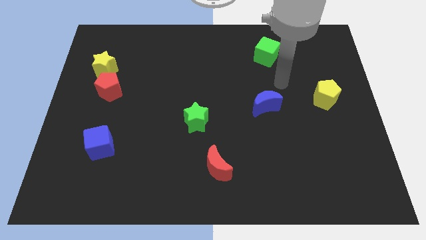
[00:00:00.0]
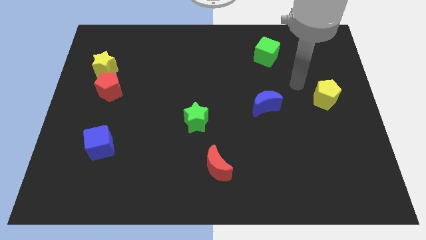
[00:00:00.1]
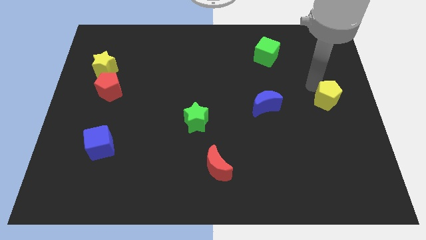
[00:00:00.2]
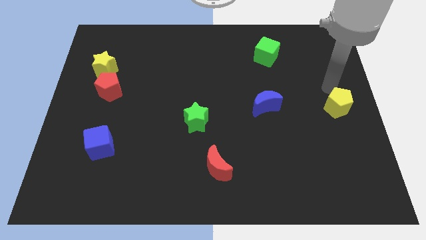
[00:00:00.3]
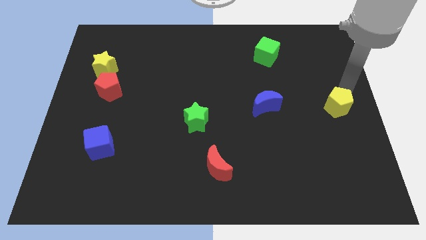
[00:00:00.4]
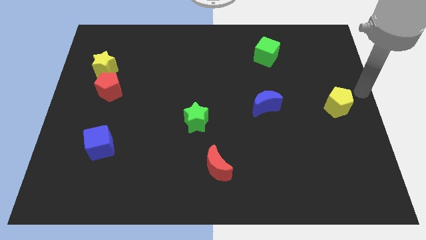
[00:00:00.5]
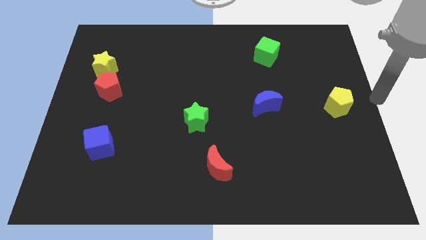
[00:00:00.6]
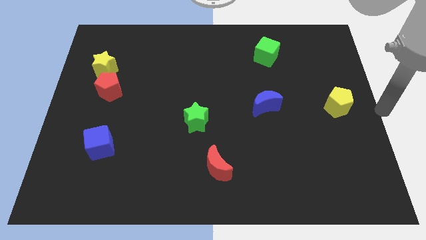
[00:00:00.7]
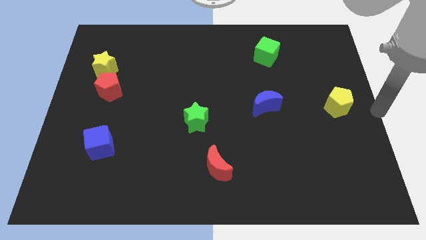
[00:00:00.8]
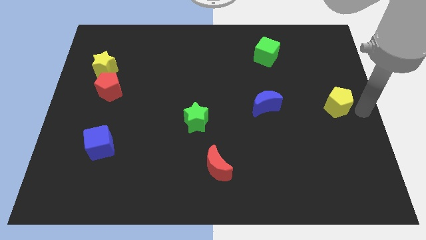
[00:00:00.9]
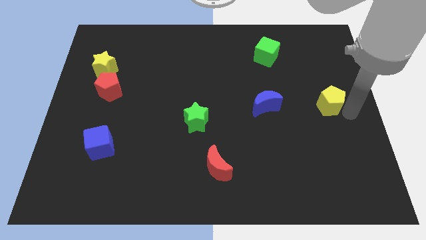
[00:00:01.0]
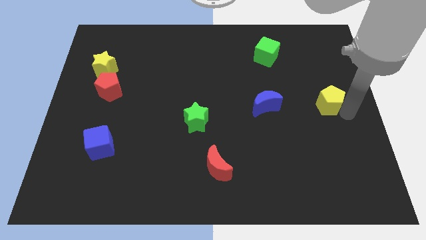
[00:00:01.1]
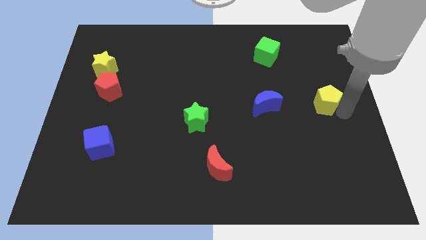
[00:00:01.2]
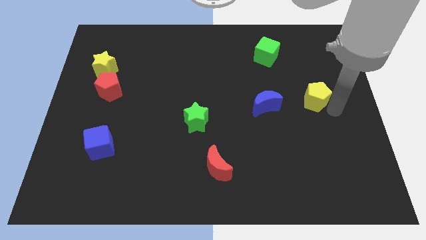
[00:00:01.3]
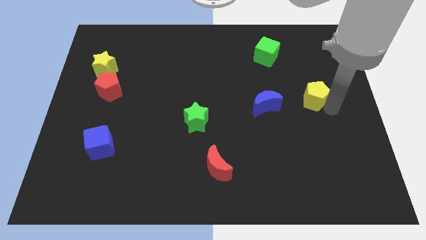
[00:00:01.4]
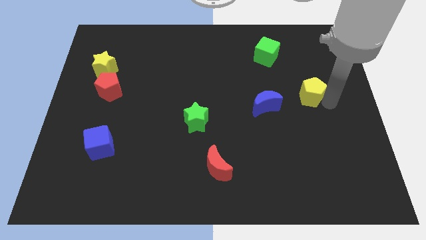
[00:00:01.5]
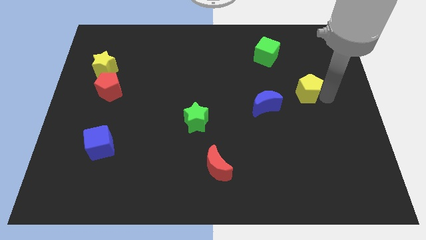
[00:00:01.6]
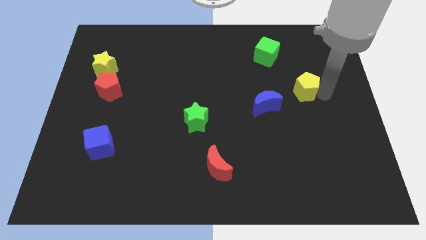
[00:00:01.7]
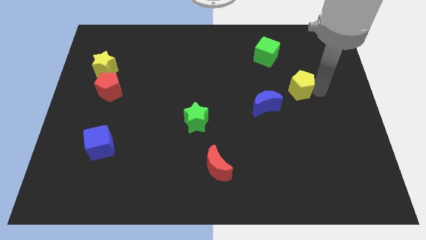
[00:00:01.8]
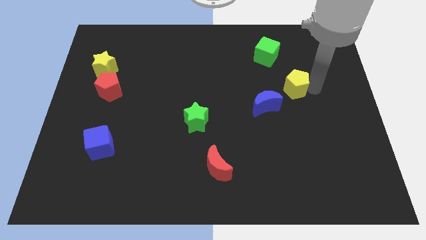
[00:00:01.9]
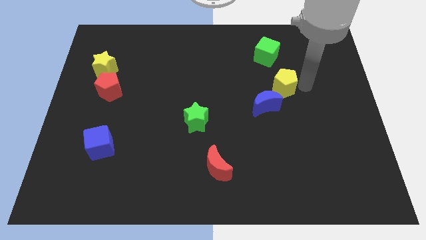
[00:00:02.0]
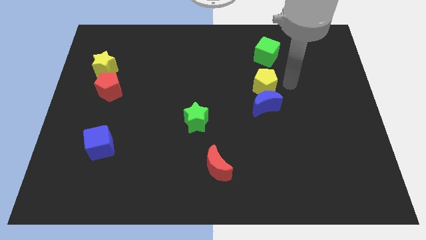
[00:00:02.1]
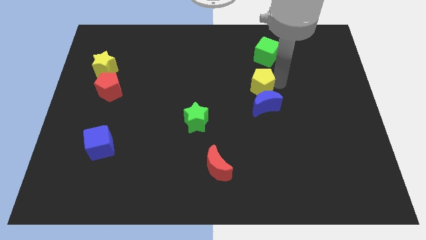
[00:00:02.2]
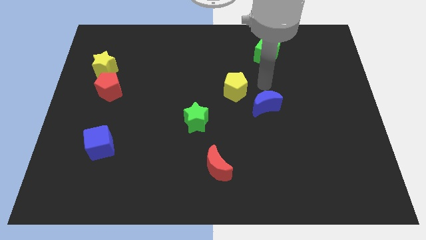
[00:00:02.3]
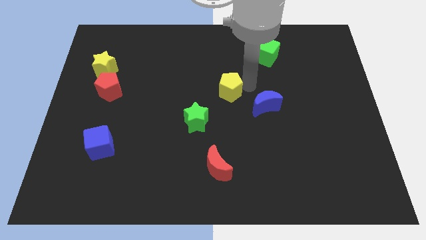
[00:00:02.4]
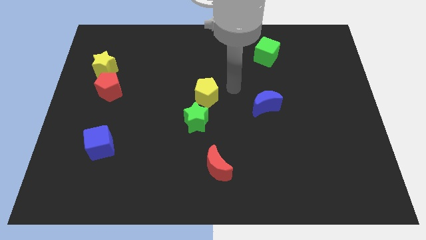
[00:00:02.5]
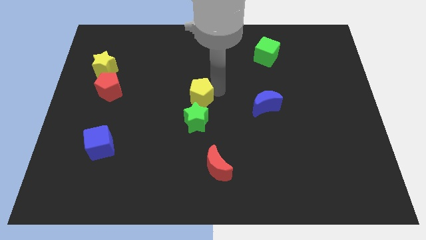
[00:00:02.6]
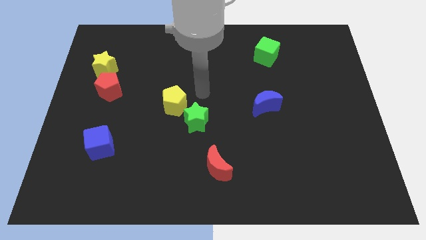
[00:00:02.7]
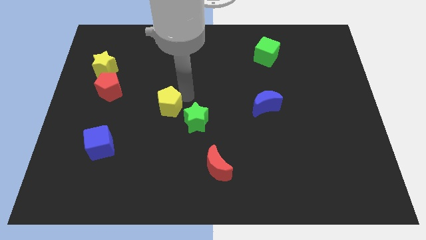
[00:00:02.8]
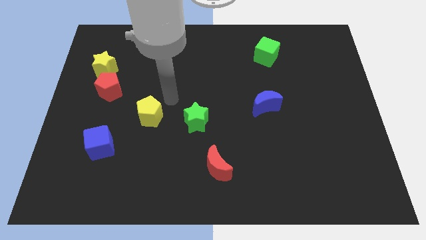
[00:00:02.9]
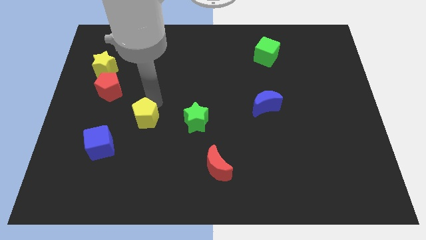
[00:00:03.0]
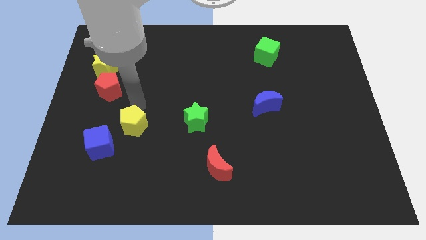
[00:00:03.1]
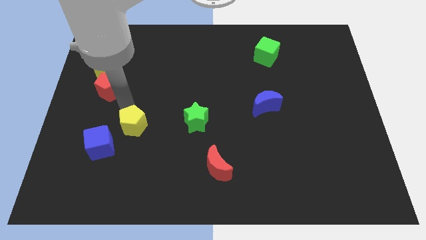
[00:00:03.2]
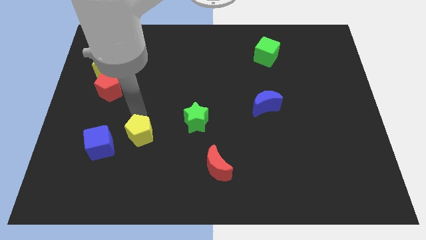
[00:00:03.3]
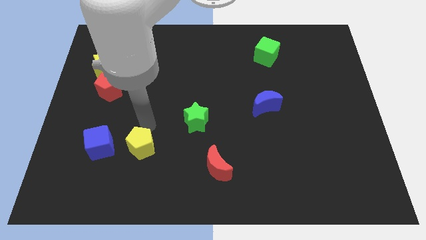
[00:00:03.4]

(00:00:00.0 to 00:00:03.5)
place the yellow pentagon to the right side of the blue cube

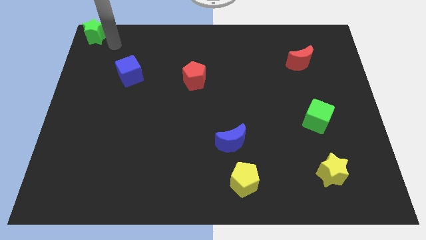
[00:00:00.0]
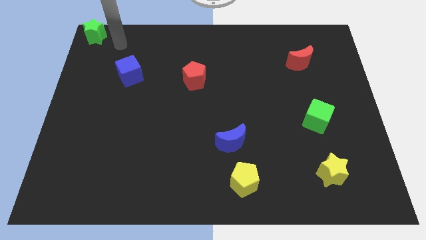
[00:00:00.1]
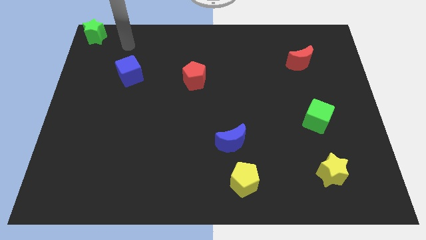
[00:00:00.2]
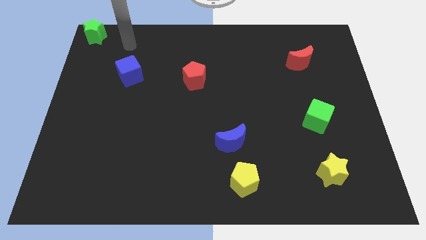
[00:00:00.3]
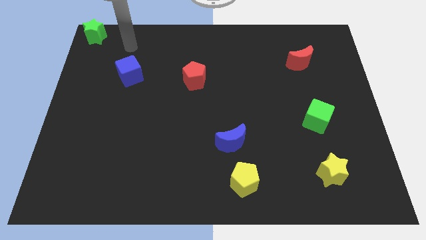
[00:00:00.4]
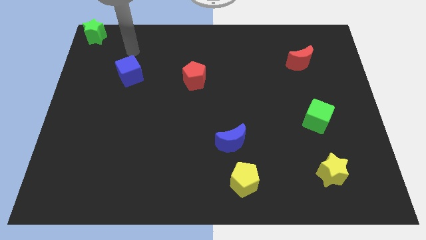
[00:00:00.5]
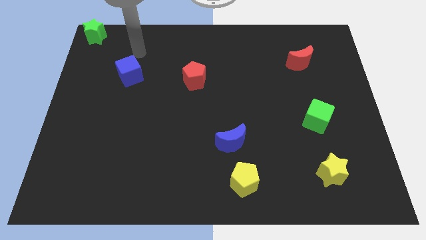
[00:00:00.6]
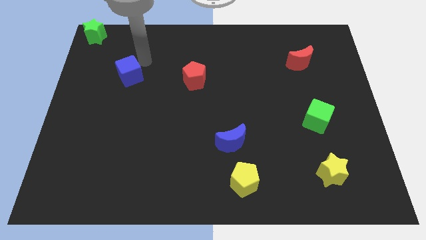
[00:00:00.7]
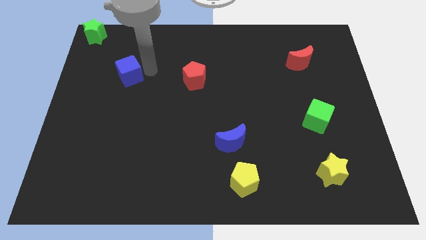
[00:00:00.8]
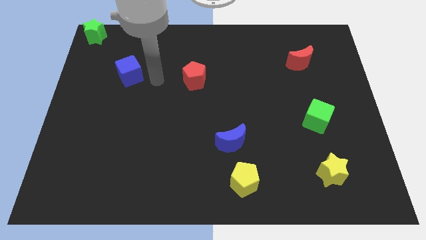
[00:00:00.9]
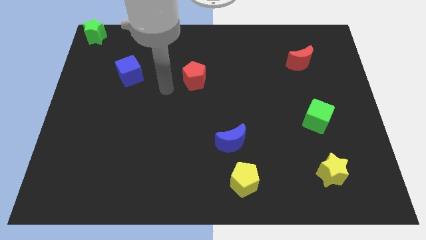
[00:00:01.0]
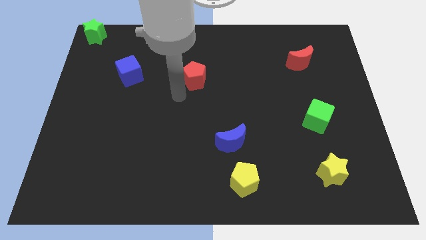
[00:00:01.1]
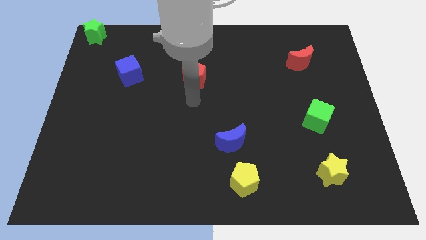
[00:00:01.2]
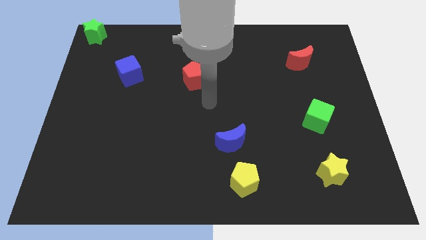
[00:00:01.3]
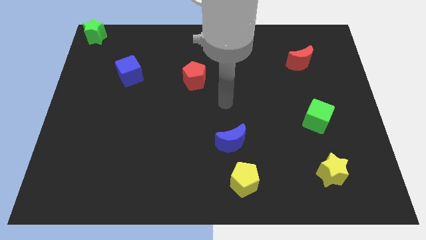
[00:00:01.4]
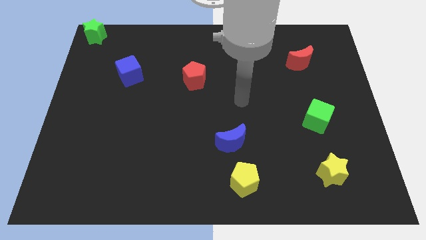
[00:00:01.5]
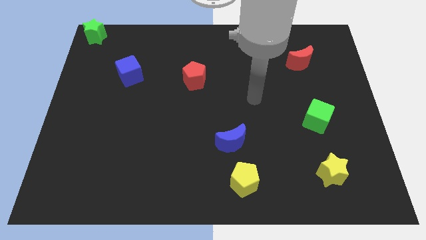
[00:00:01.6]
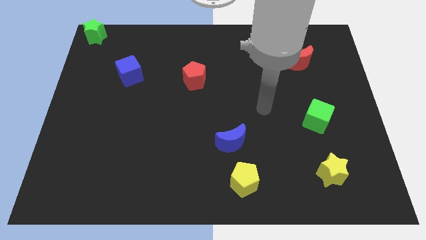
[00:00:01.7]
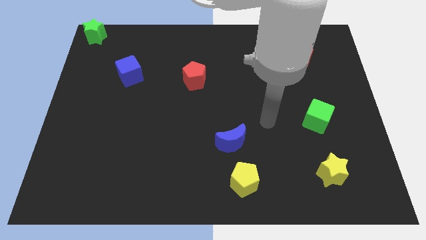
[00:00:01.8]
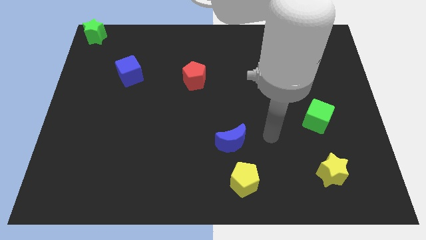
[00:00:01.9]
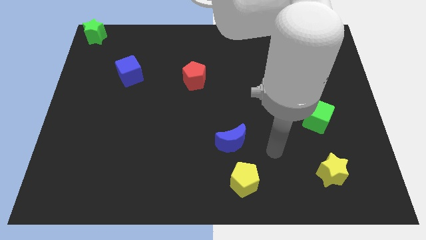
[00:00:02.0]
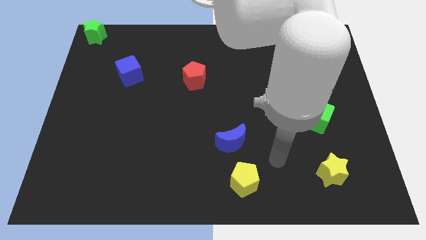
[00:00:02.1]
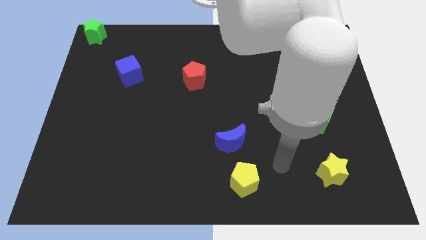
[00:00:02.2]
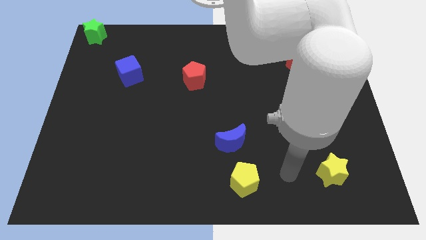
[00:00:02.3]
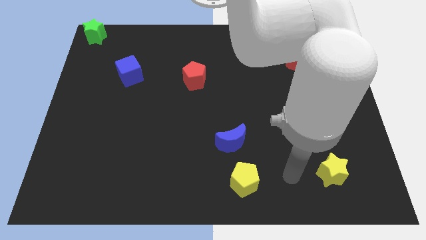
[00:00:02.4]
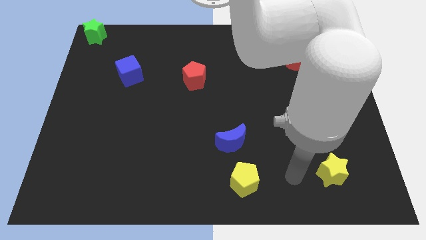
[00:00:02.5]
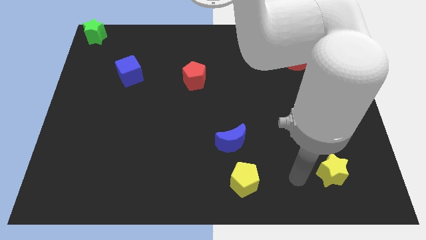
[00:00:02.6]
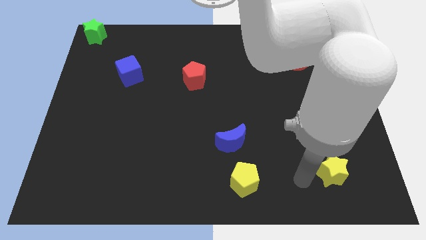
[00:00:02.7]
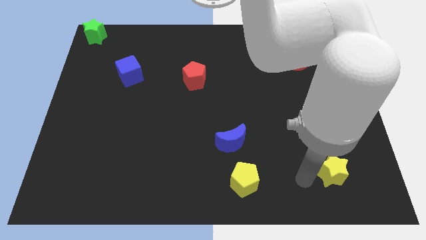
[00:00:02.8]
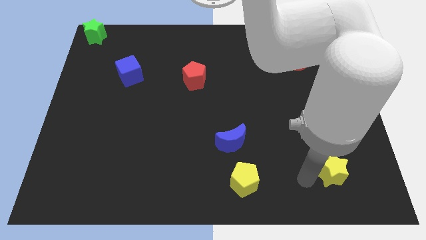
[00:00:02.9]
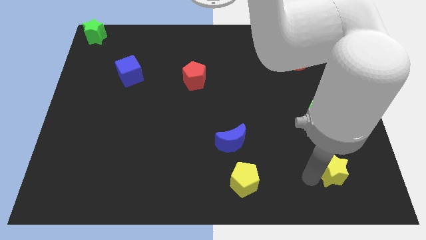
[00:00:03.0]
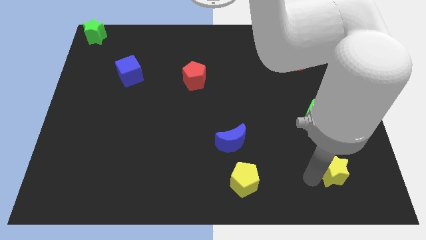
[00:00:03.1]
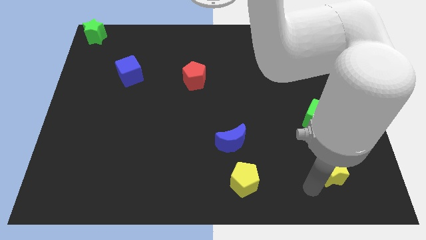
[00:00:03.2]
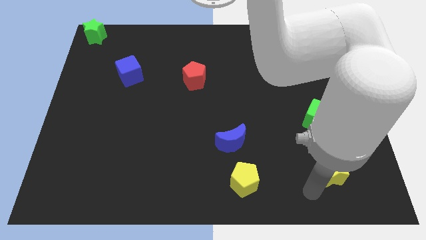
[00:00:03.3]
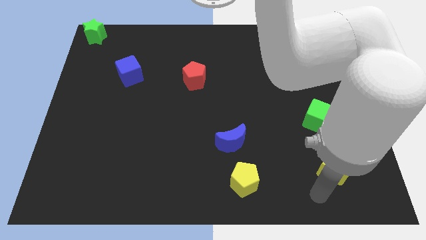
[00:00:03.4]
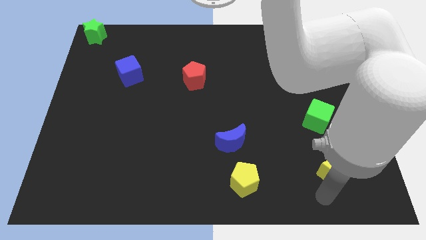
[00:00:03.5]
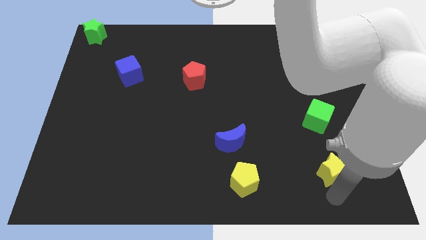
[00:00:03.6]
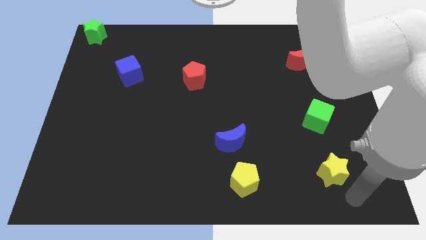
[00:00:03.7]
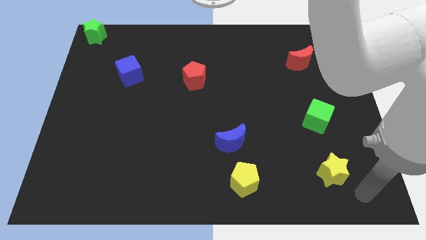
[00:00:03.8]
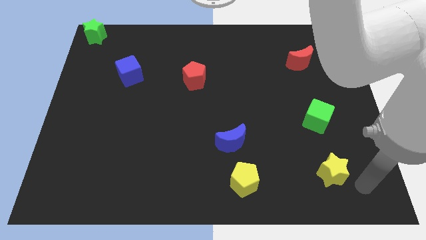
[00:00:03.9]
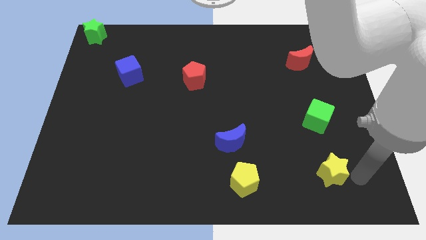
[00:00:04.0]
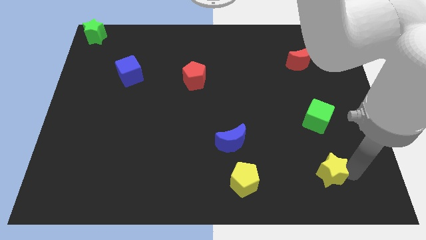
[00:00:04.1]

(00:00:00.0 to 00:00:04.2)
point your arm at the right side of the yellow star

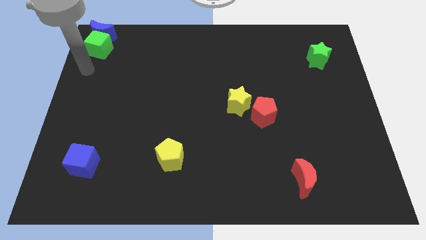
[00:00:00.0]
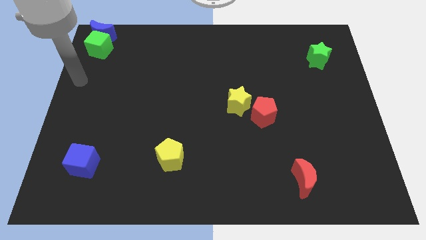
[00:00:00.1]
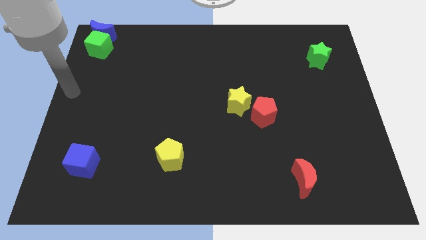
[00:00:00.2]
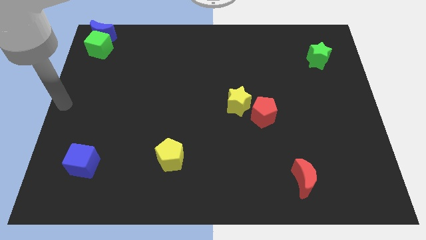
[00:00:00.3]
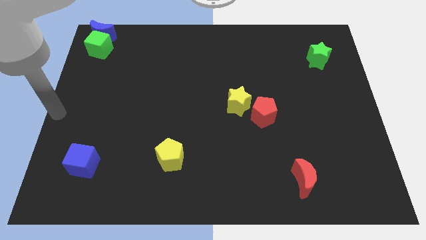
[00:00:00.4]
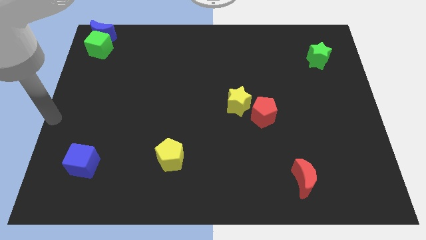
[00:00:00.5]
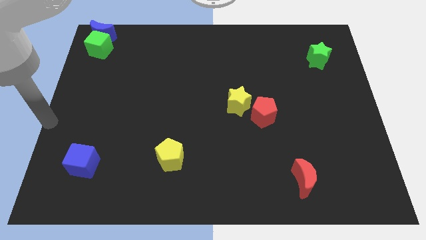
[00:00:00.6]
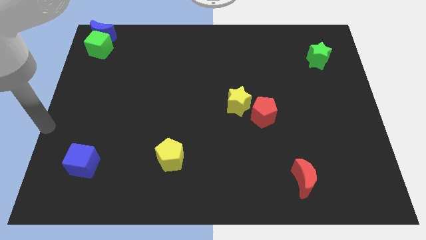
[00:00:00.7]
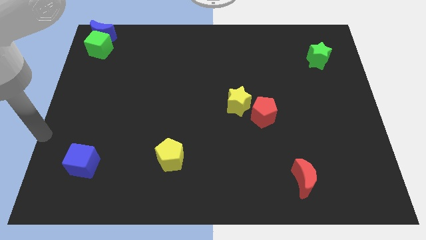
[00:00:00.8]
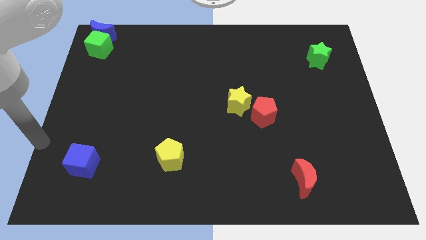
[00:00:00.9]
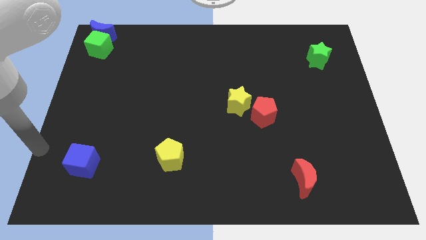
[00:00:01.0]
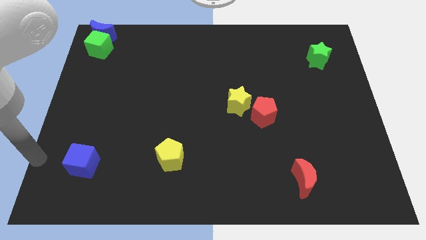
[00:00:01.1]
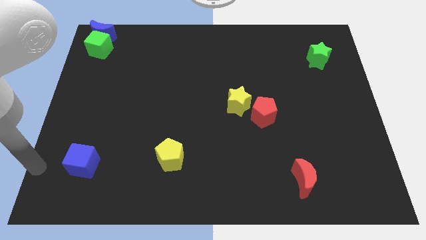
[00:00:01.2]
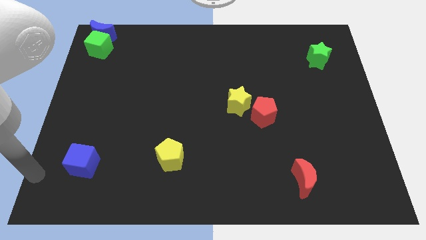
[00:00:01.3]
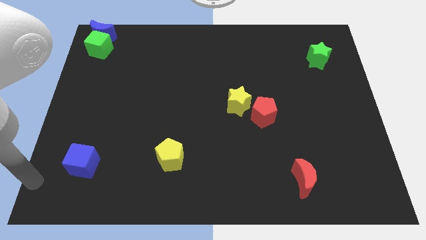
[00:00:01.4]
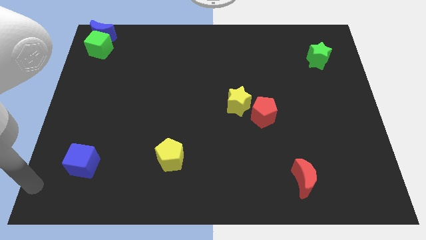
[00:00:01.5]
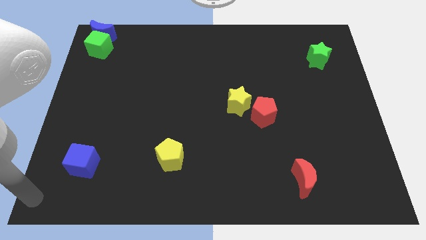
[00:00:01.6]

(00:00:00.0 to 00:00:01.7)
place your arm at the bottom left corner of the board
